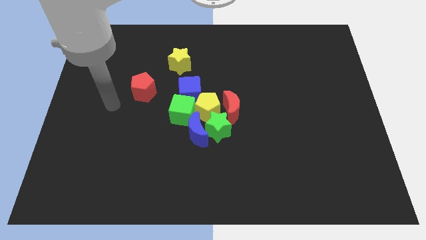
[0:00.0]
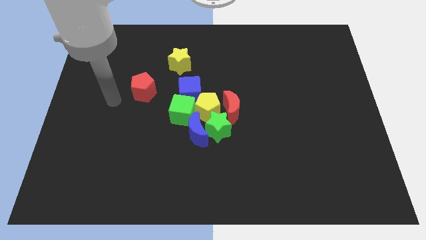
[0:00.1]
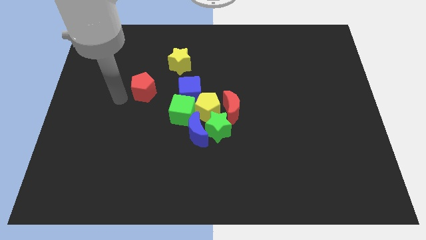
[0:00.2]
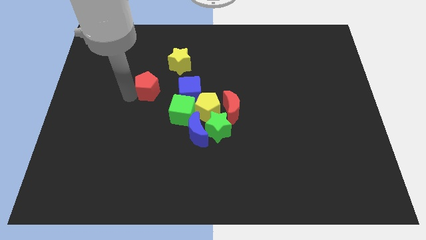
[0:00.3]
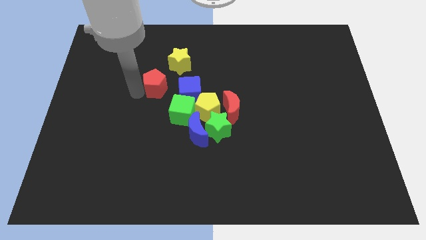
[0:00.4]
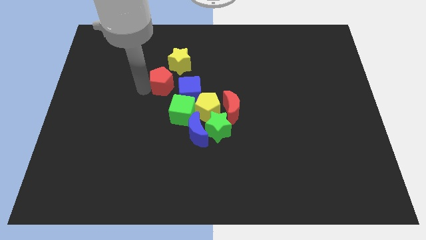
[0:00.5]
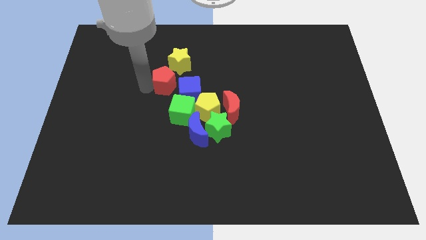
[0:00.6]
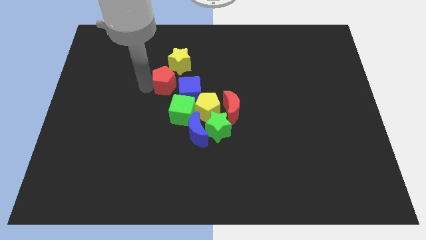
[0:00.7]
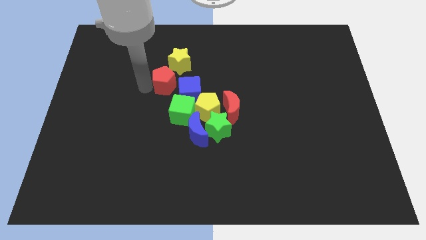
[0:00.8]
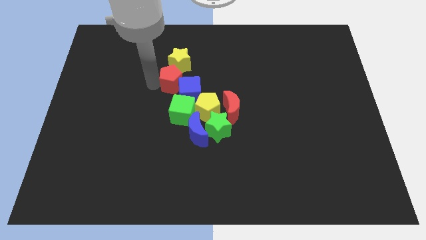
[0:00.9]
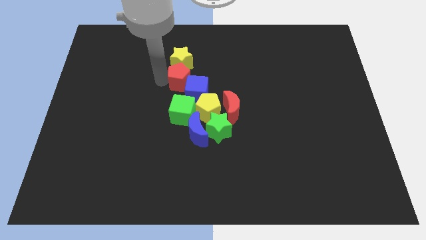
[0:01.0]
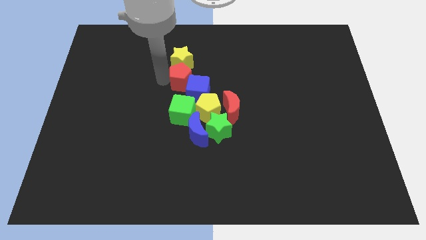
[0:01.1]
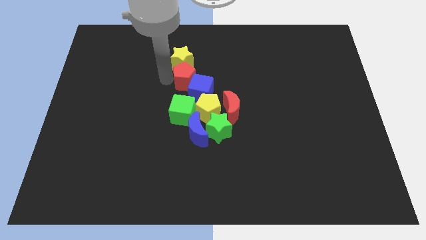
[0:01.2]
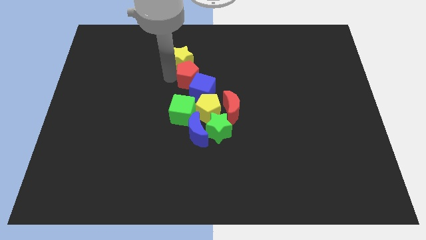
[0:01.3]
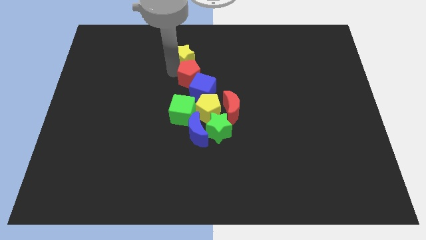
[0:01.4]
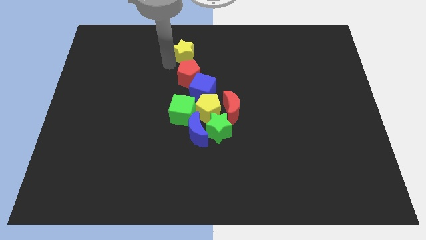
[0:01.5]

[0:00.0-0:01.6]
push the red pentagon into the blue moon and the yellow star

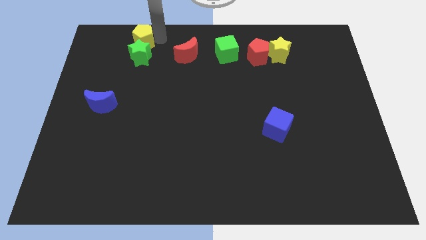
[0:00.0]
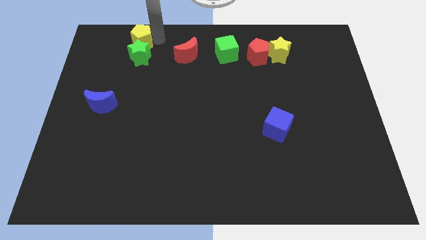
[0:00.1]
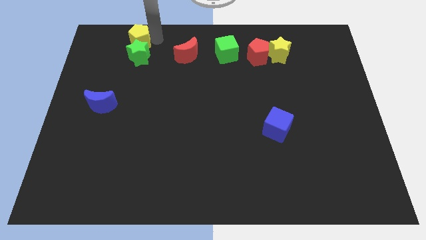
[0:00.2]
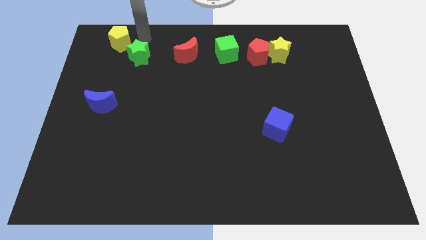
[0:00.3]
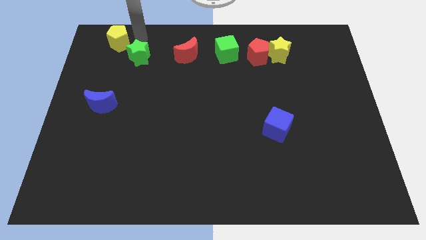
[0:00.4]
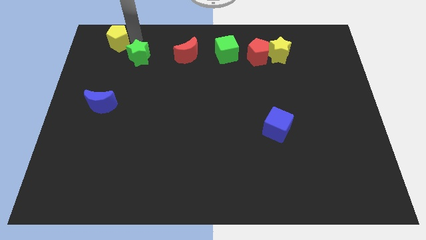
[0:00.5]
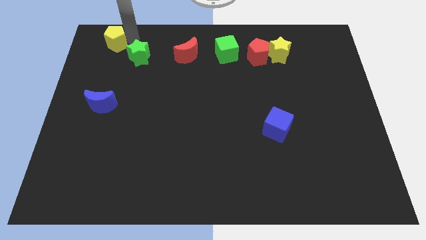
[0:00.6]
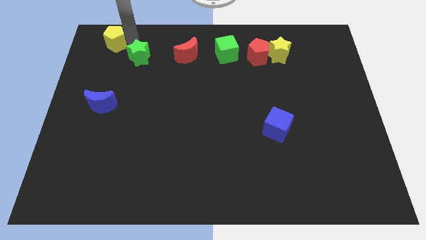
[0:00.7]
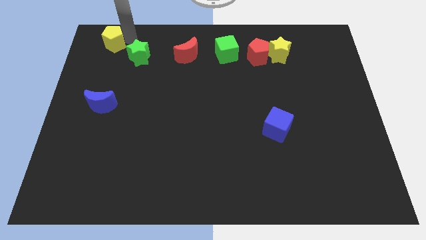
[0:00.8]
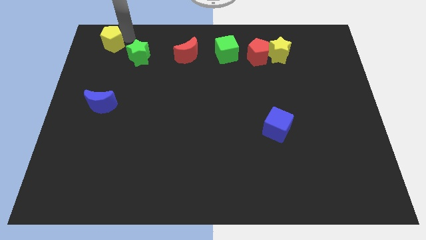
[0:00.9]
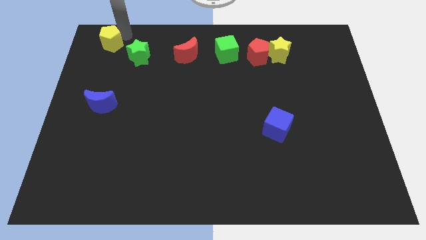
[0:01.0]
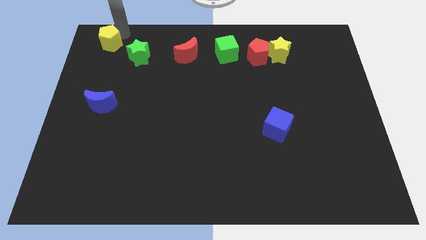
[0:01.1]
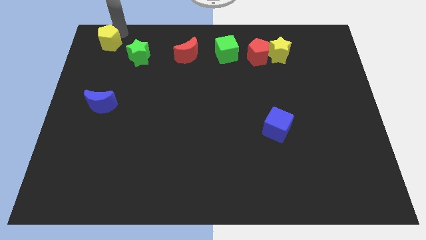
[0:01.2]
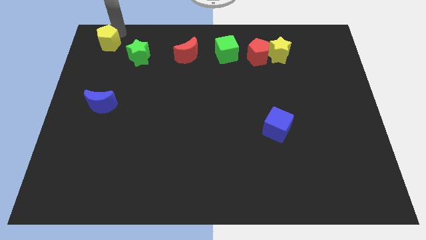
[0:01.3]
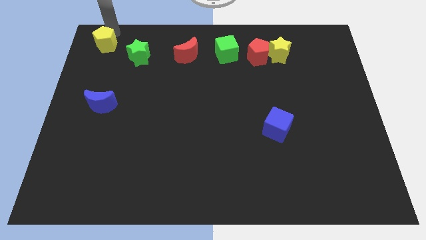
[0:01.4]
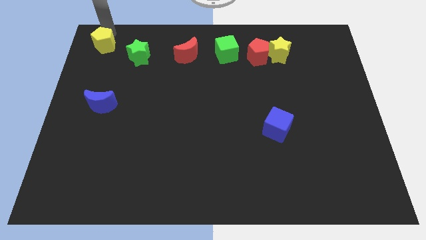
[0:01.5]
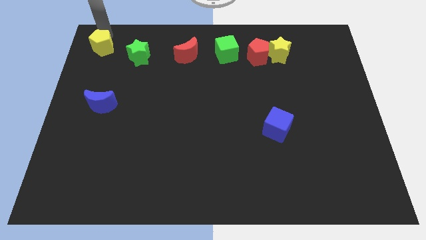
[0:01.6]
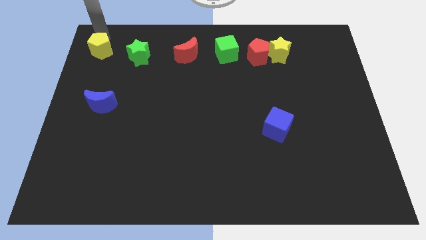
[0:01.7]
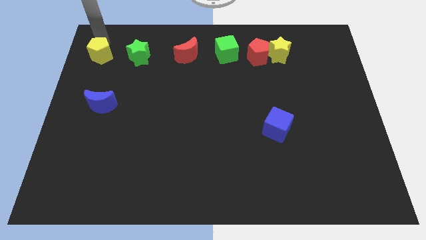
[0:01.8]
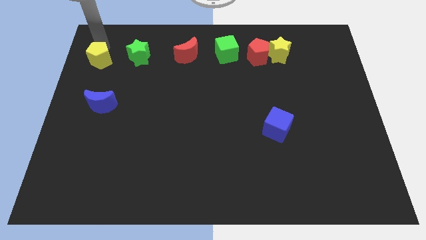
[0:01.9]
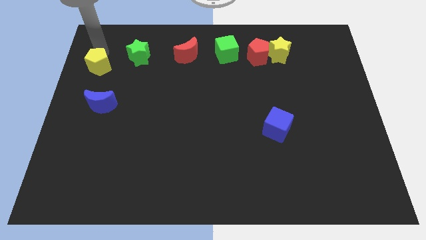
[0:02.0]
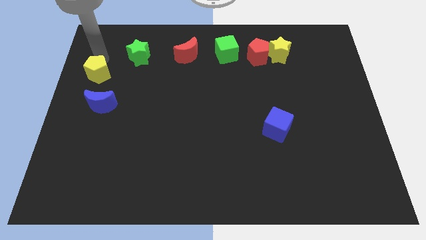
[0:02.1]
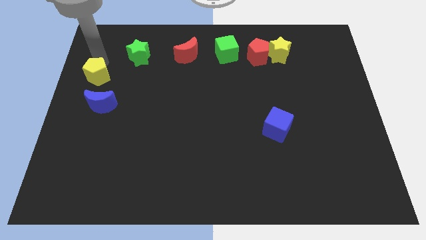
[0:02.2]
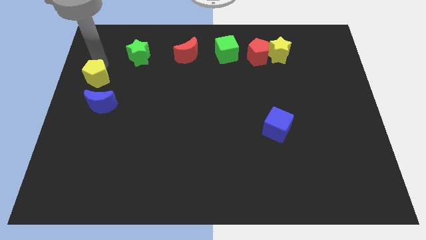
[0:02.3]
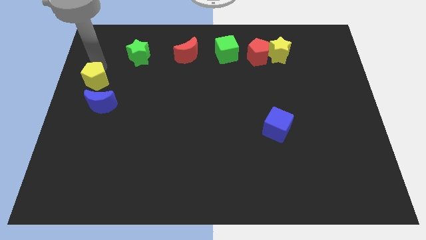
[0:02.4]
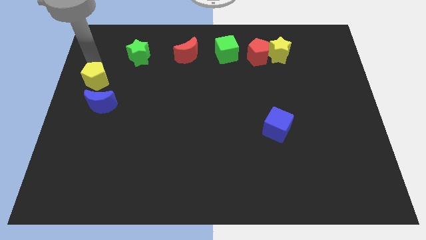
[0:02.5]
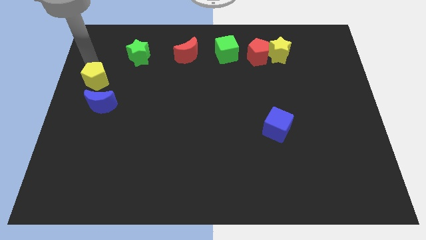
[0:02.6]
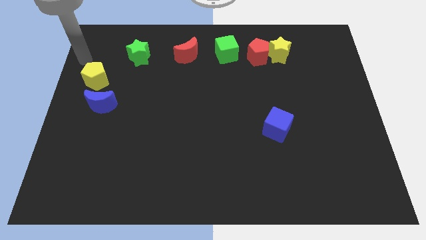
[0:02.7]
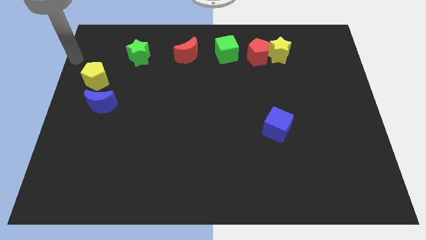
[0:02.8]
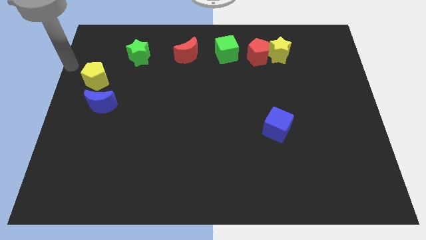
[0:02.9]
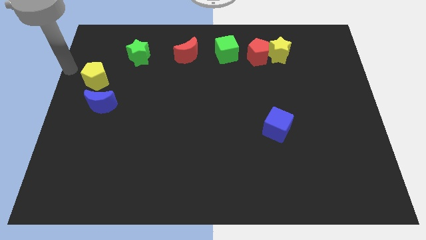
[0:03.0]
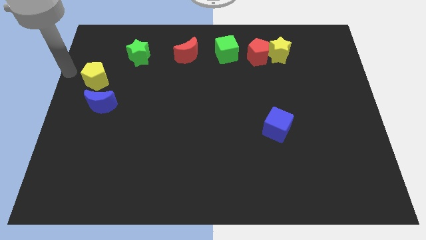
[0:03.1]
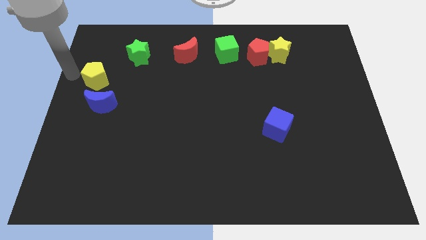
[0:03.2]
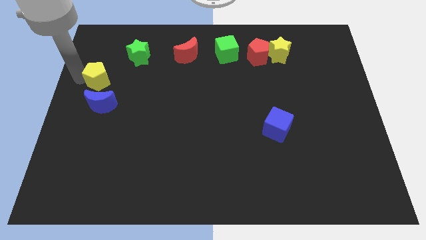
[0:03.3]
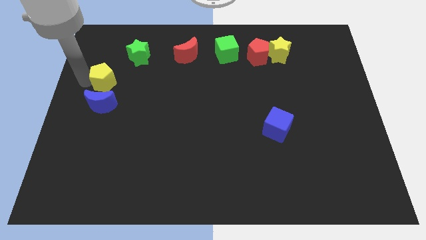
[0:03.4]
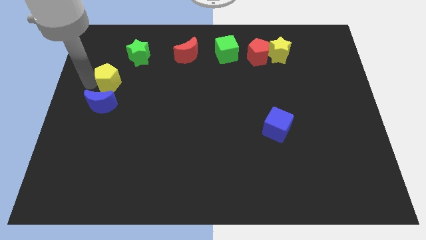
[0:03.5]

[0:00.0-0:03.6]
put the yellow pentagon above the nlue crescent

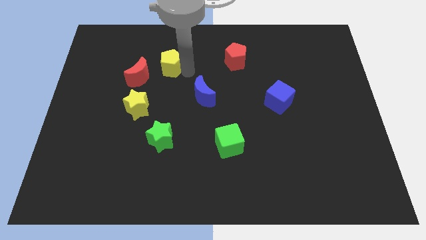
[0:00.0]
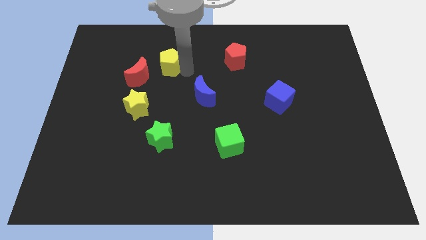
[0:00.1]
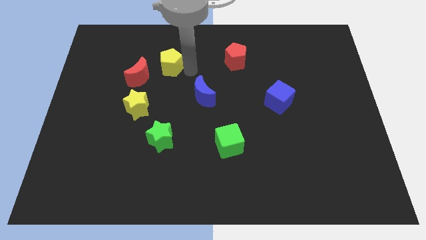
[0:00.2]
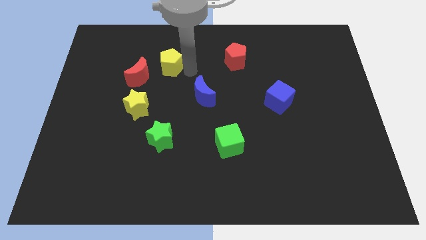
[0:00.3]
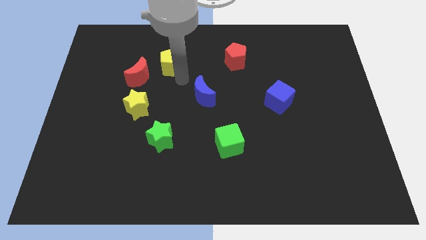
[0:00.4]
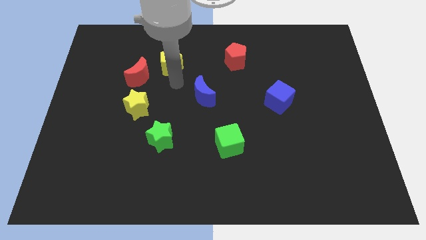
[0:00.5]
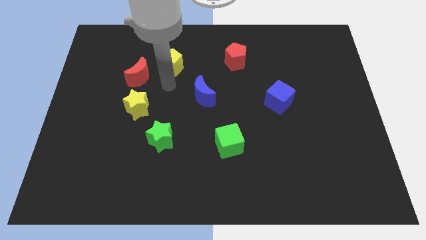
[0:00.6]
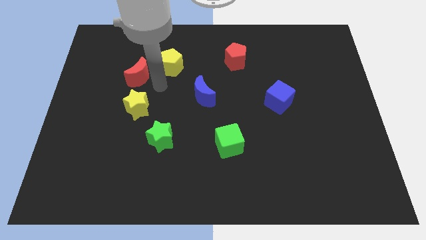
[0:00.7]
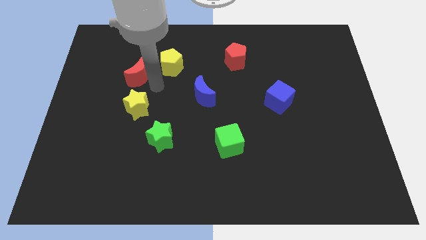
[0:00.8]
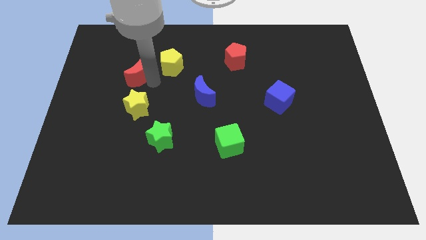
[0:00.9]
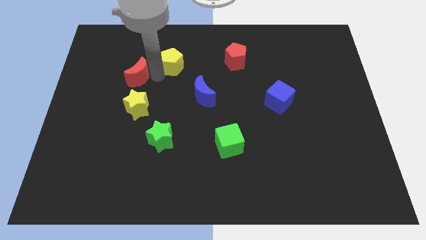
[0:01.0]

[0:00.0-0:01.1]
move the yellow pentagon slightly up

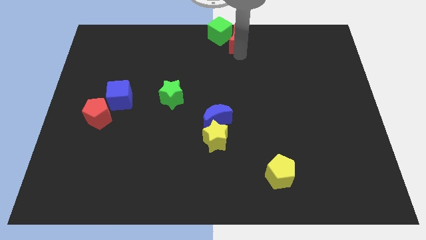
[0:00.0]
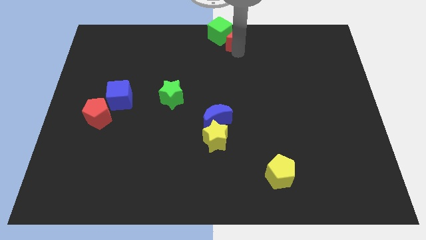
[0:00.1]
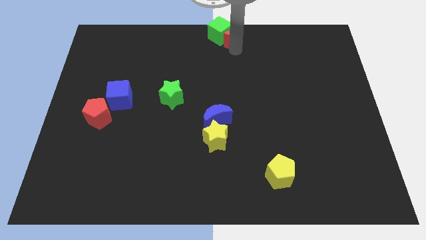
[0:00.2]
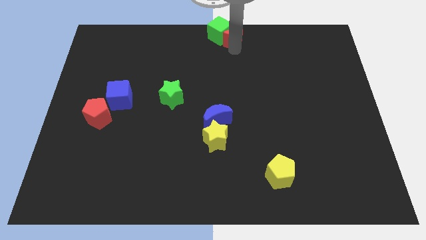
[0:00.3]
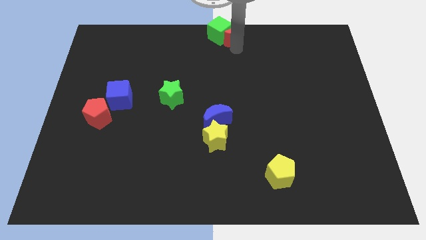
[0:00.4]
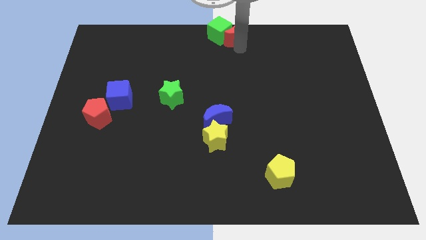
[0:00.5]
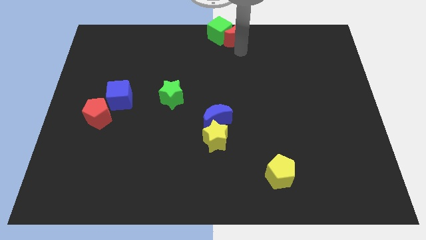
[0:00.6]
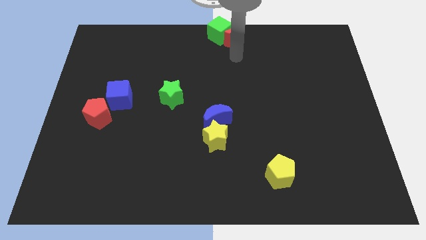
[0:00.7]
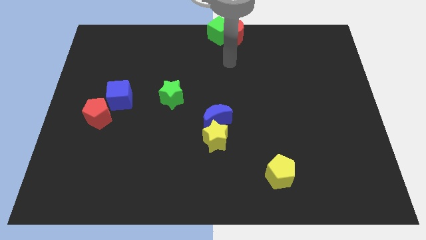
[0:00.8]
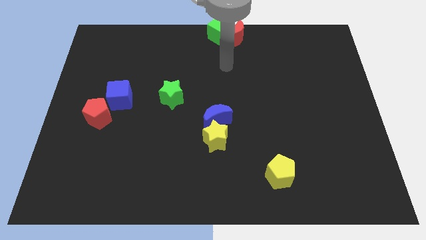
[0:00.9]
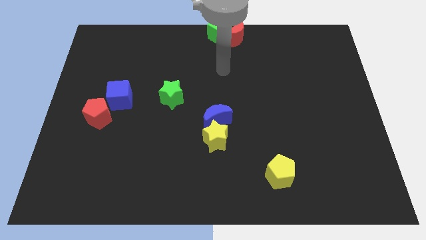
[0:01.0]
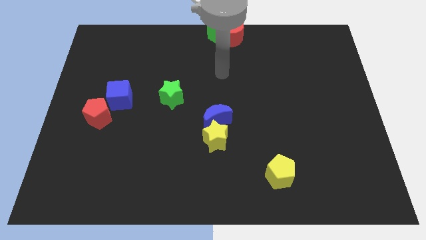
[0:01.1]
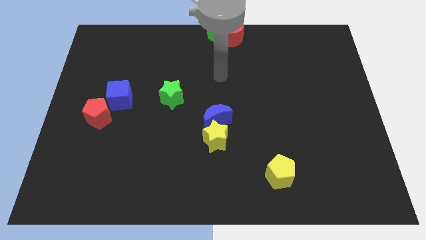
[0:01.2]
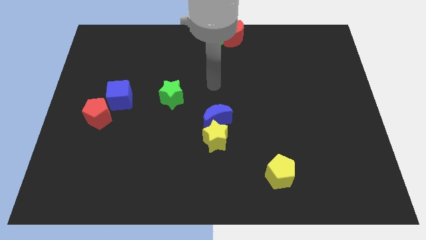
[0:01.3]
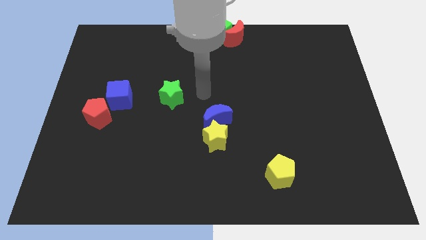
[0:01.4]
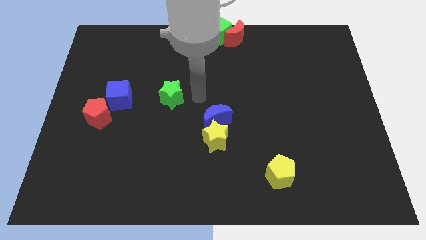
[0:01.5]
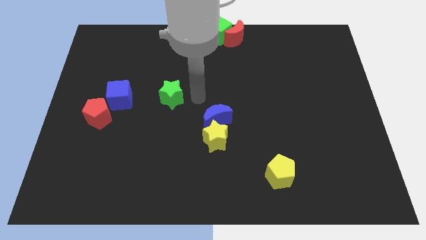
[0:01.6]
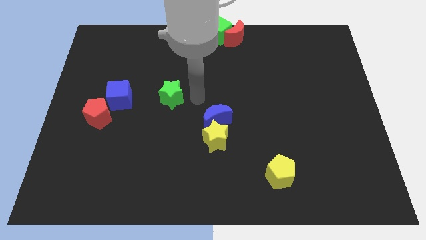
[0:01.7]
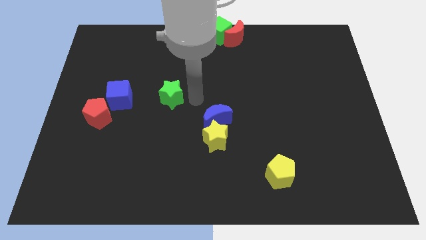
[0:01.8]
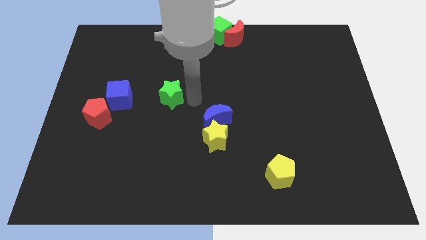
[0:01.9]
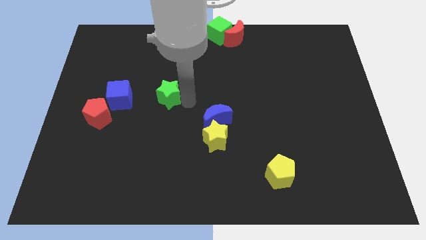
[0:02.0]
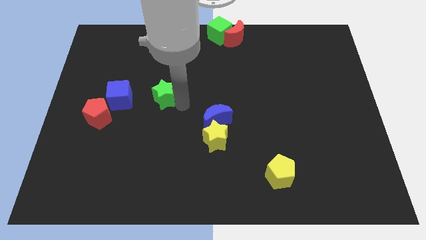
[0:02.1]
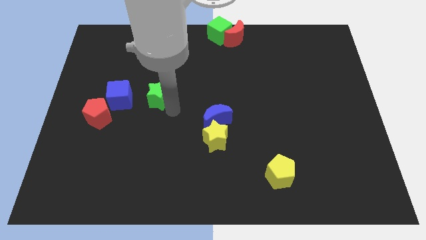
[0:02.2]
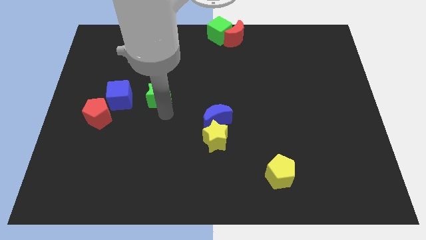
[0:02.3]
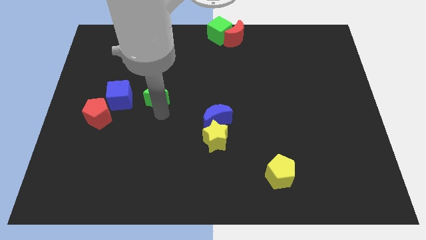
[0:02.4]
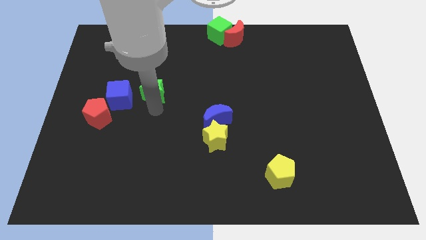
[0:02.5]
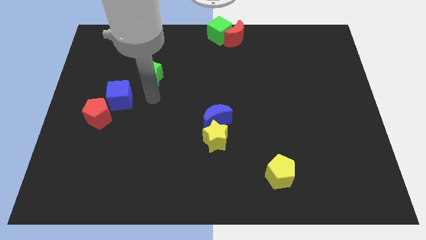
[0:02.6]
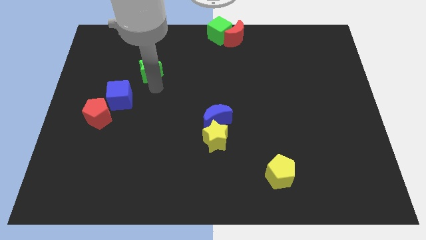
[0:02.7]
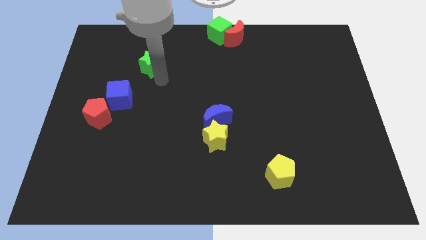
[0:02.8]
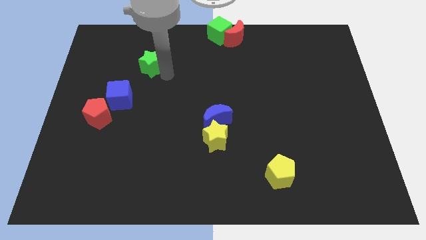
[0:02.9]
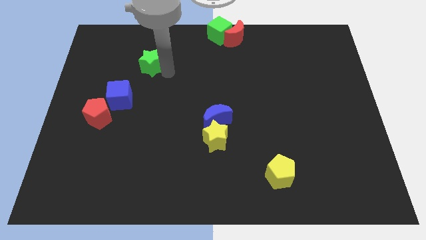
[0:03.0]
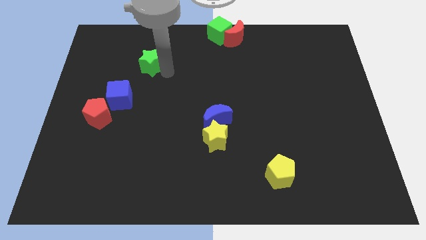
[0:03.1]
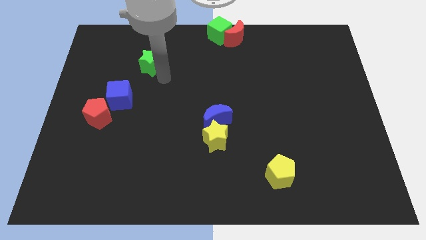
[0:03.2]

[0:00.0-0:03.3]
place the green star diagonal to the blue cube
